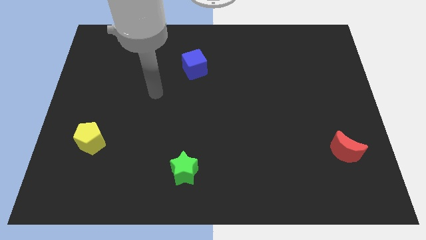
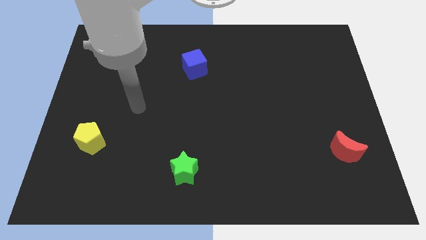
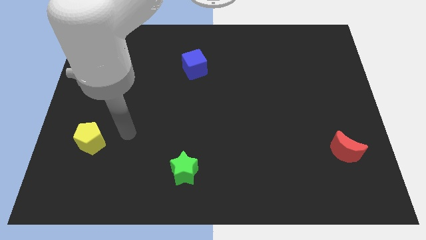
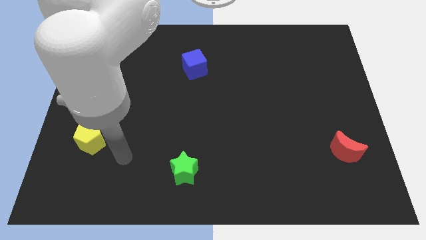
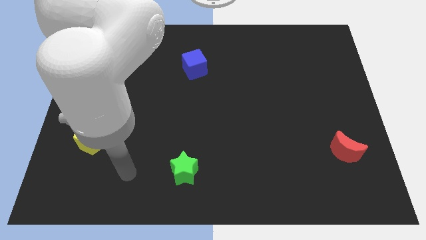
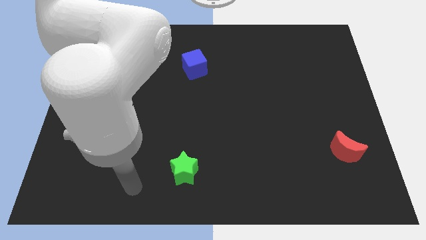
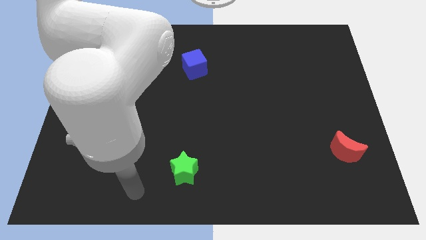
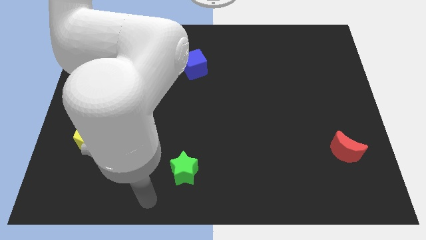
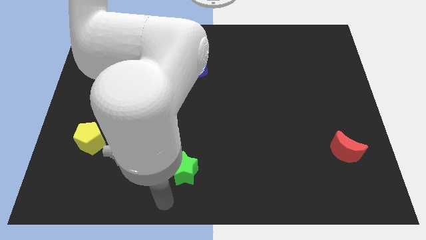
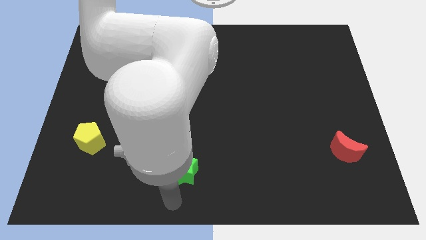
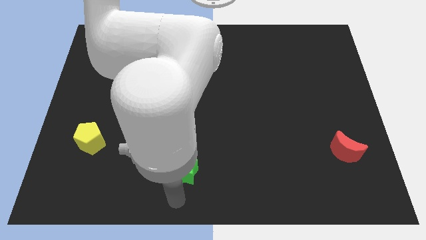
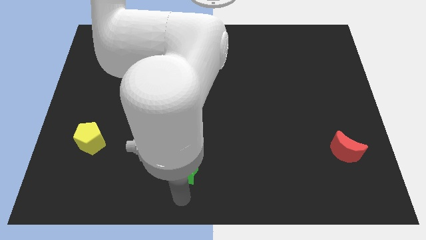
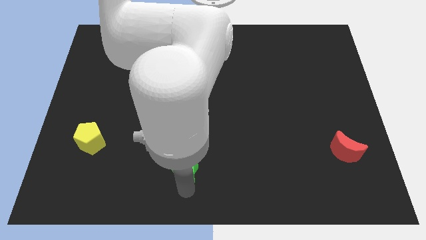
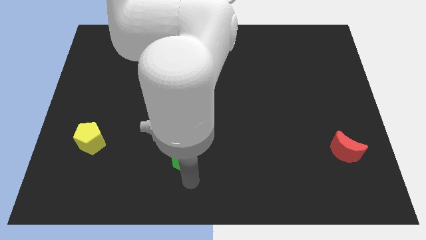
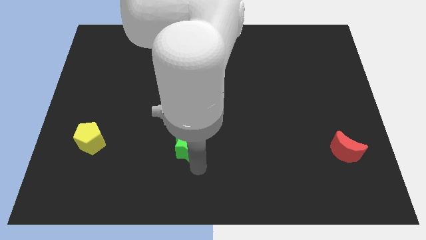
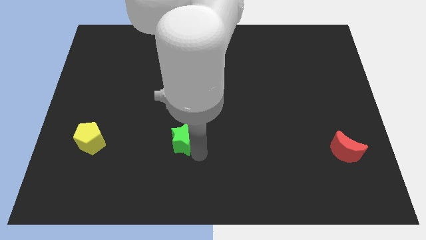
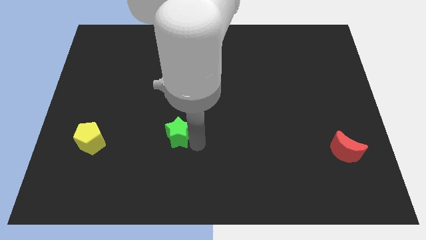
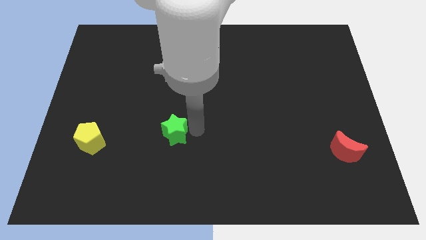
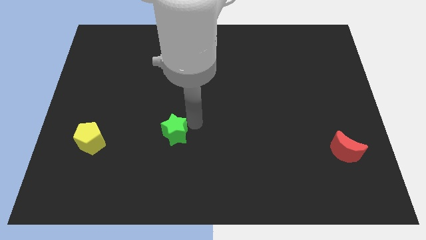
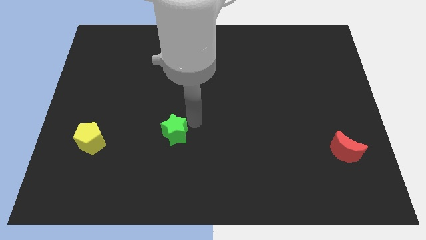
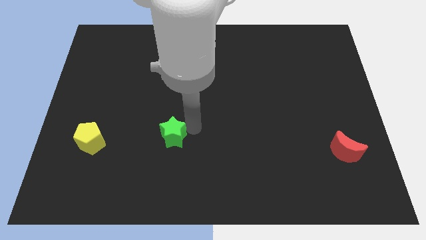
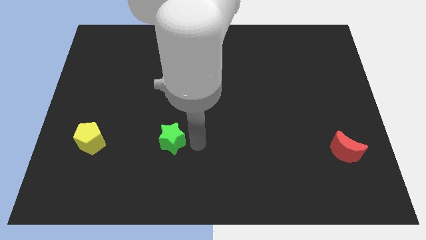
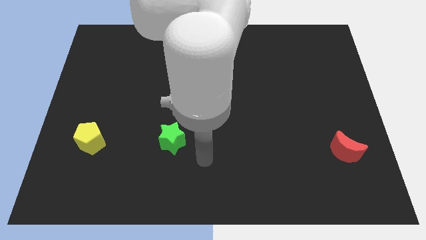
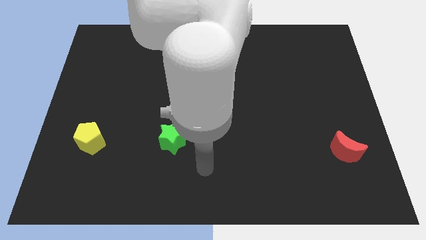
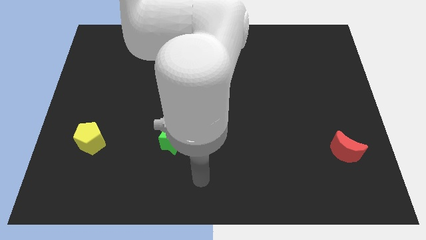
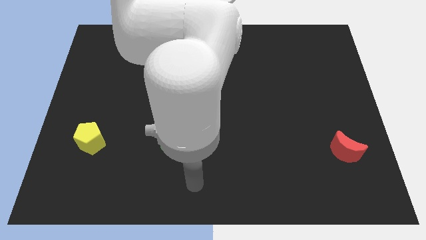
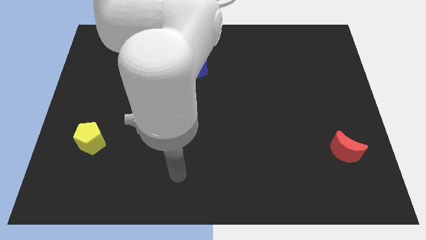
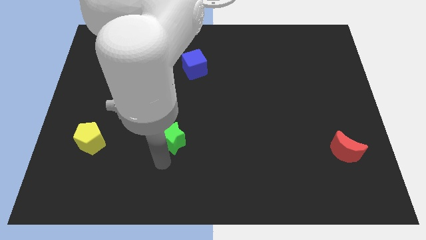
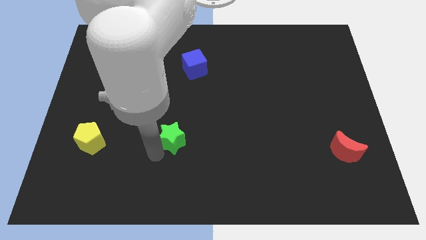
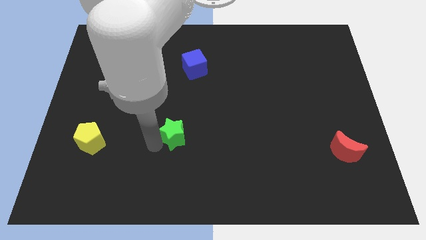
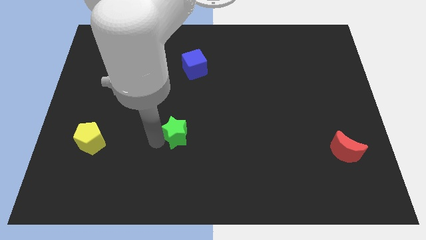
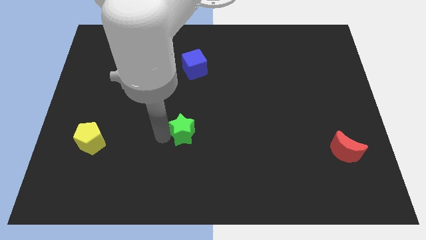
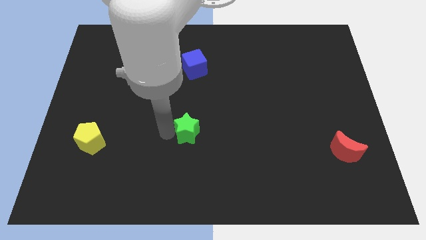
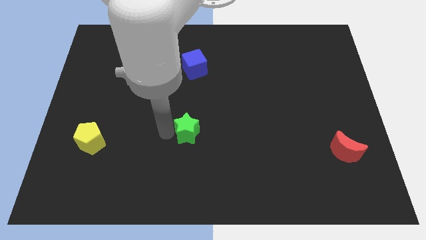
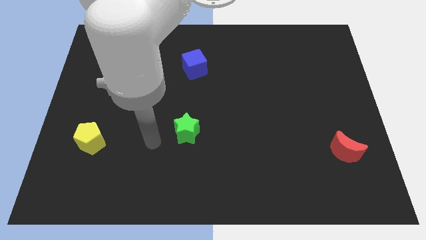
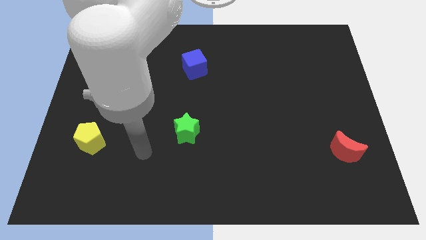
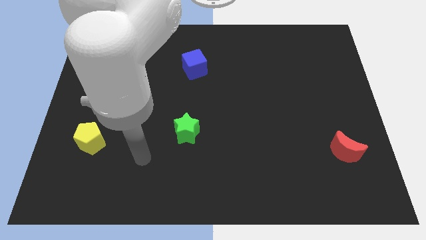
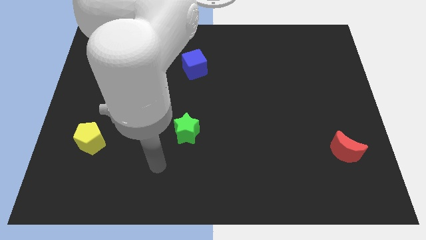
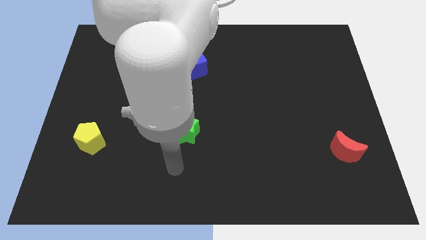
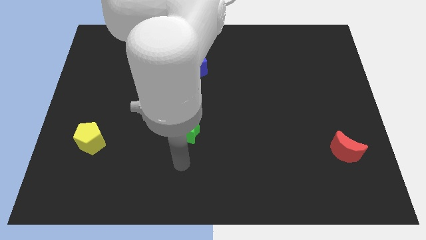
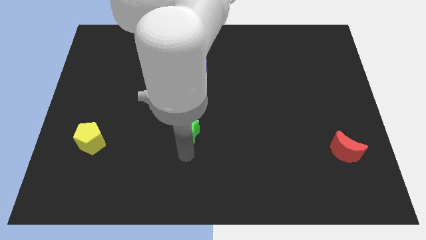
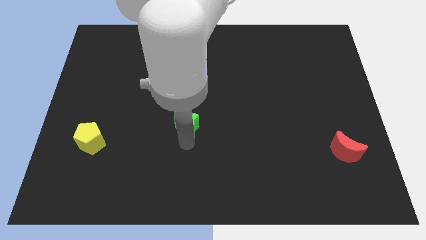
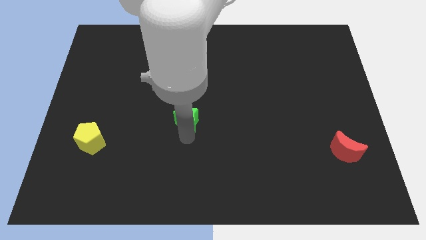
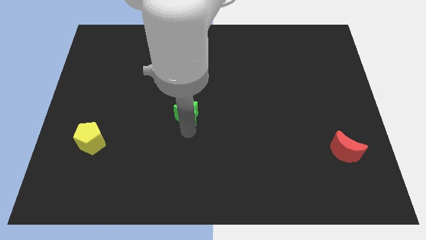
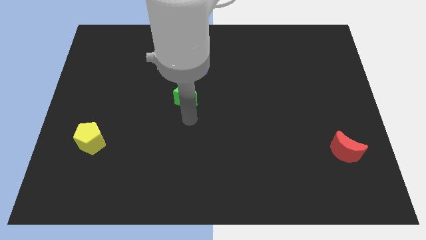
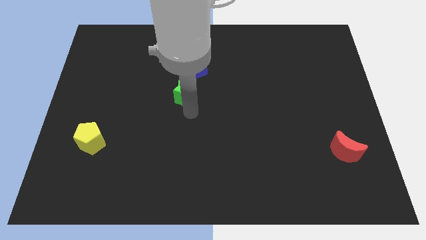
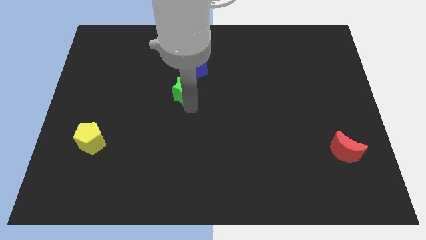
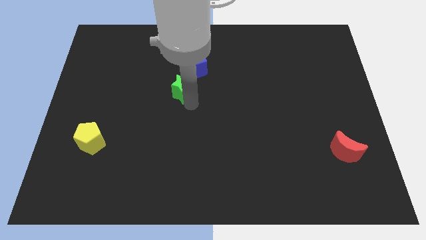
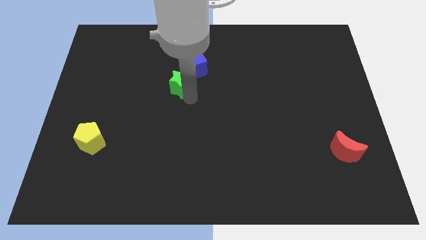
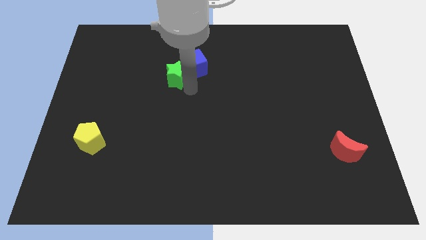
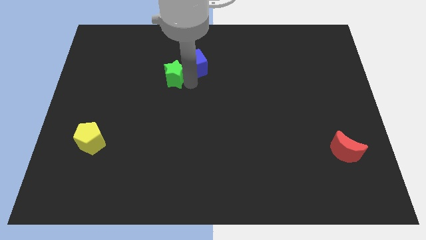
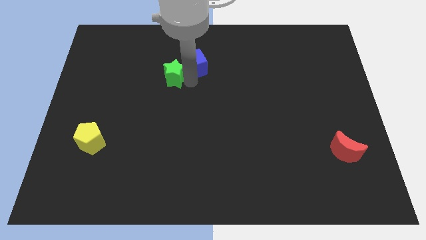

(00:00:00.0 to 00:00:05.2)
slide the green block close to the blue block

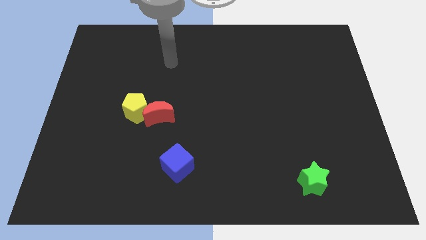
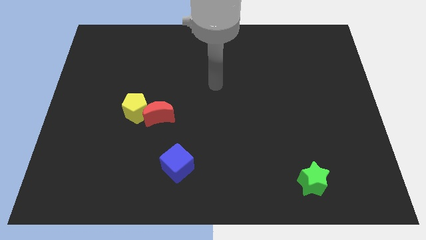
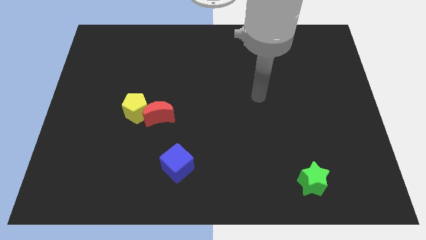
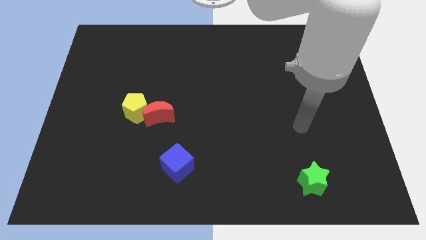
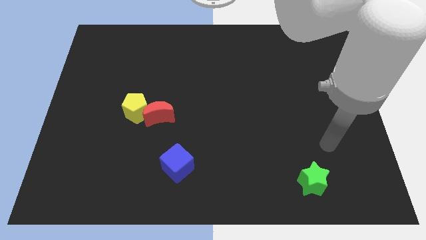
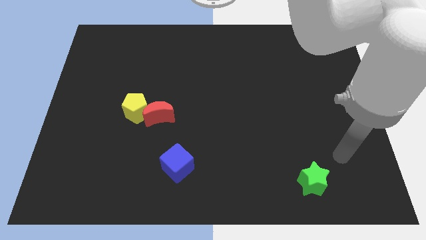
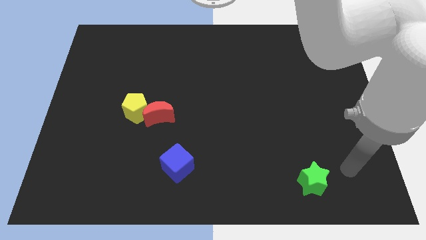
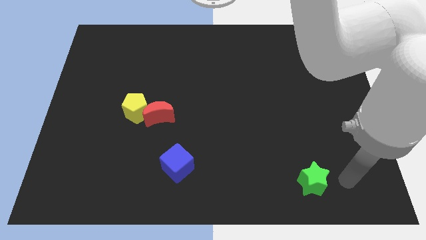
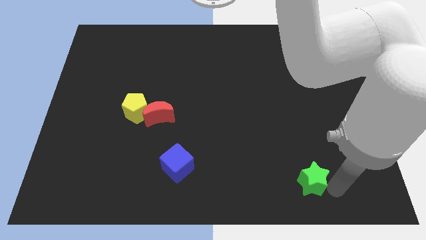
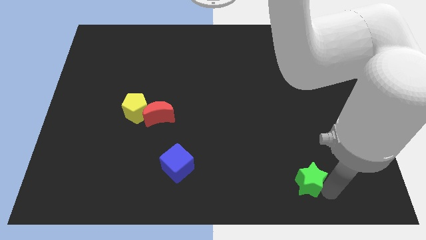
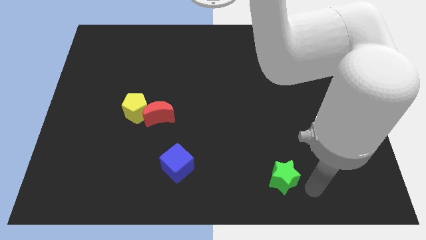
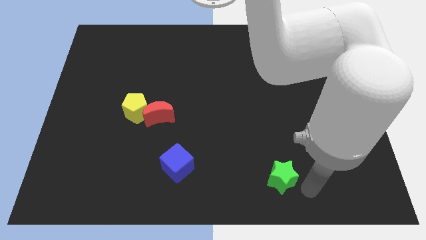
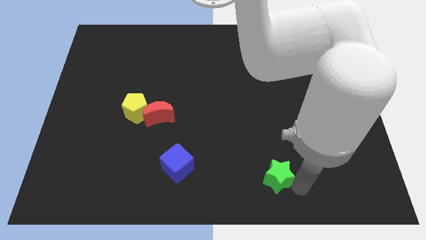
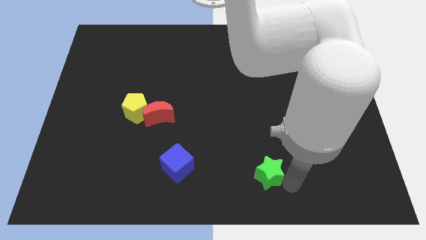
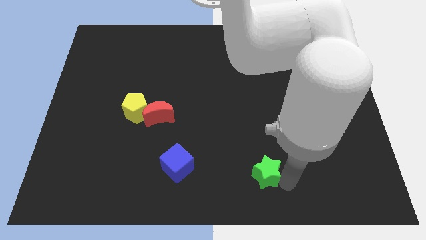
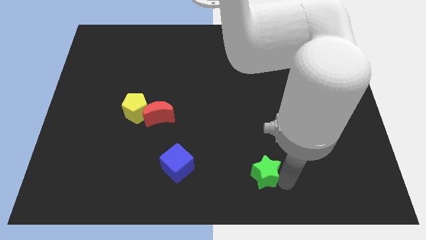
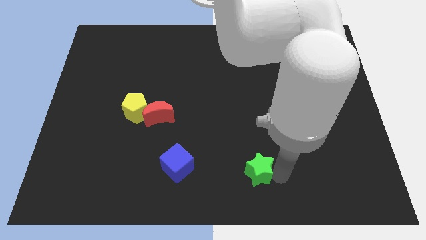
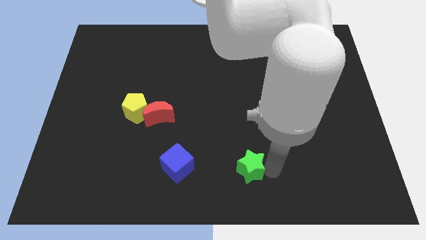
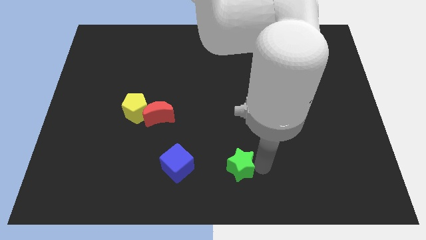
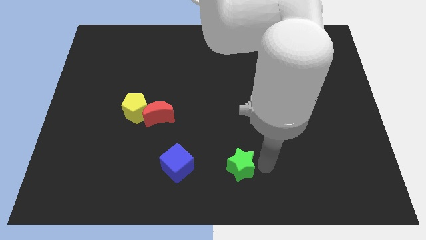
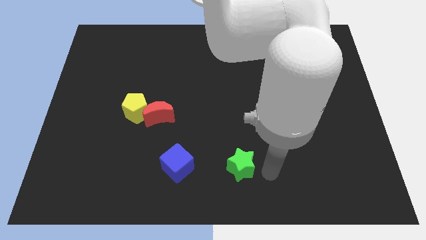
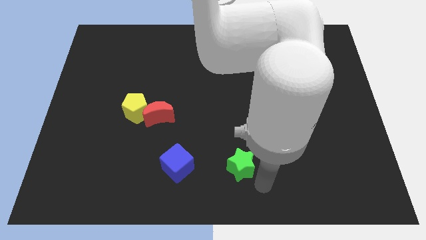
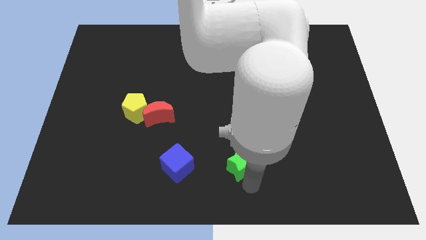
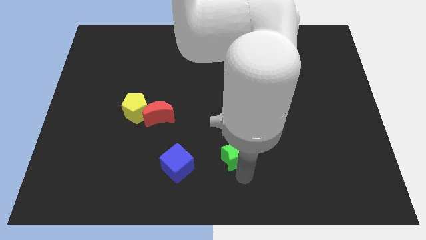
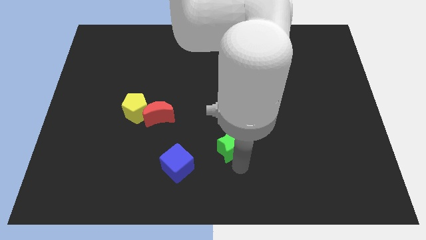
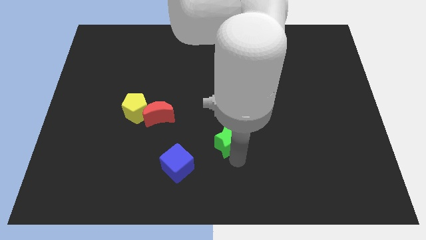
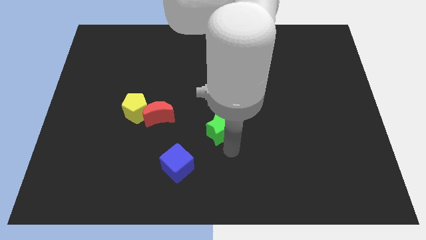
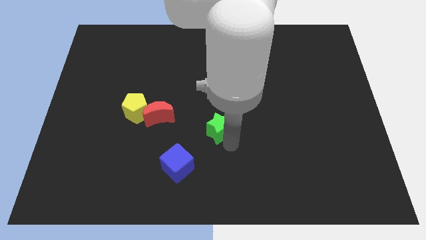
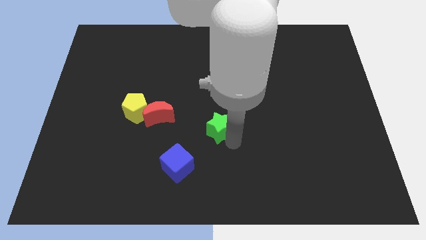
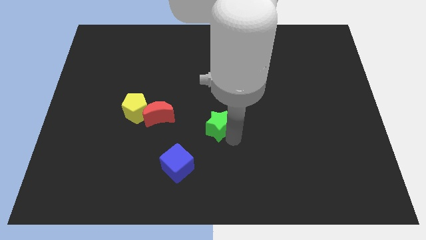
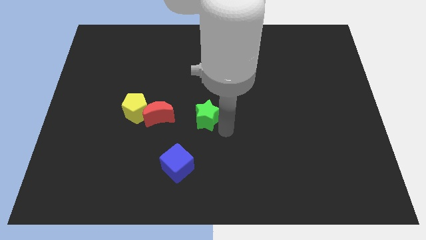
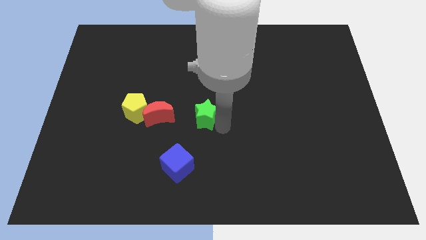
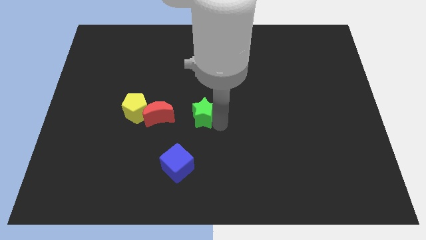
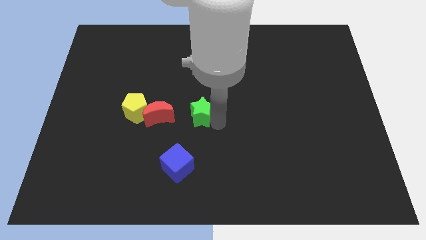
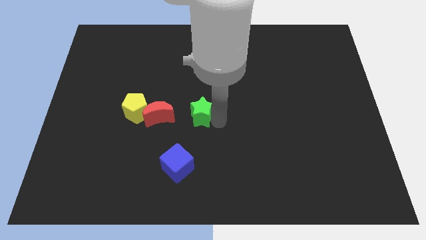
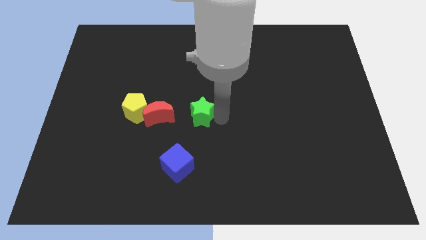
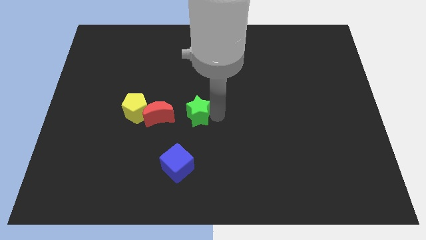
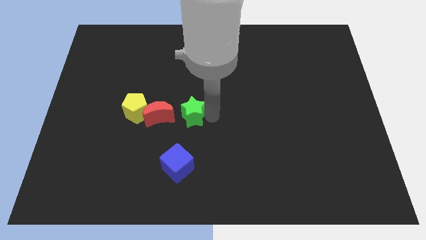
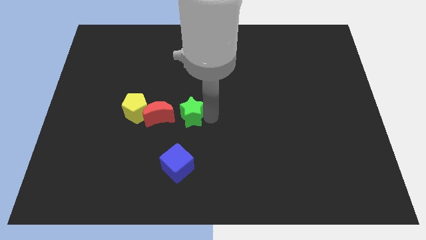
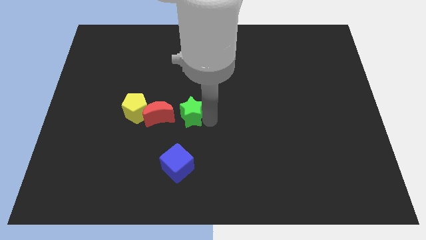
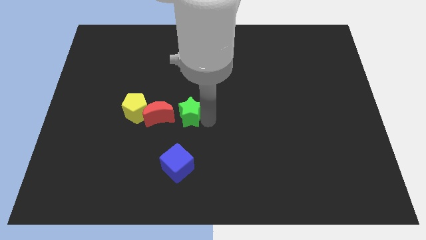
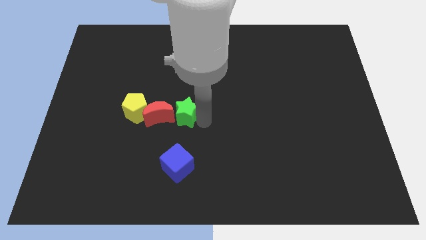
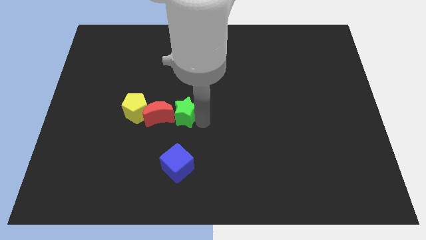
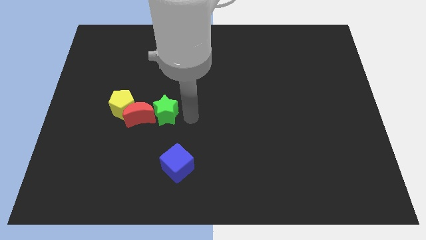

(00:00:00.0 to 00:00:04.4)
move the green block towards the moon
